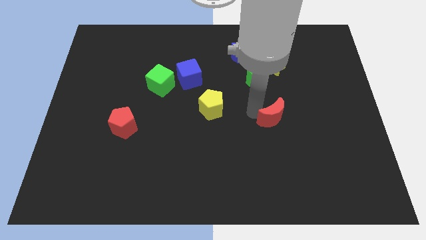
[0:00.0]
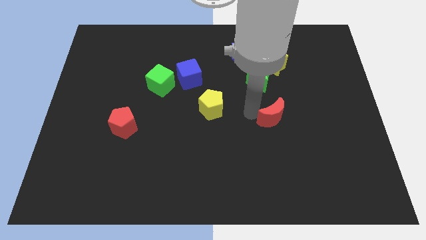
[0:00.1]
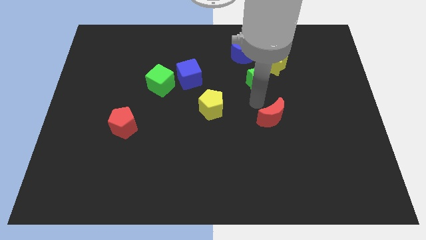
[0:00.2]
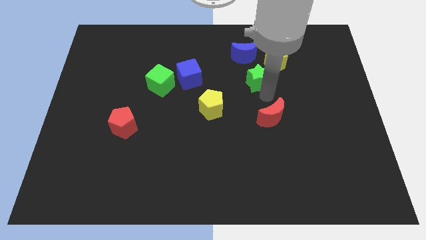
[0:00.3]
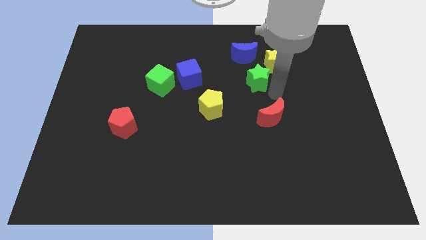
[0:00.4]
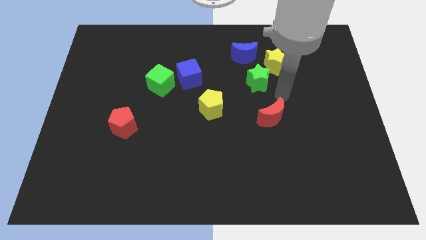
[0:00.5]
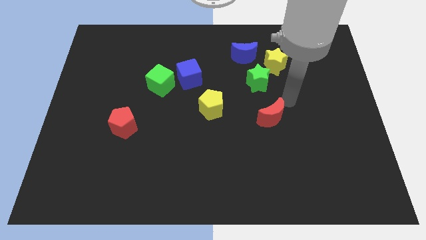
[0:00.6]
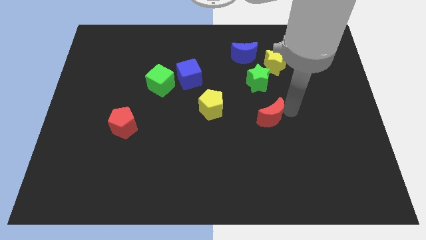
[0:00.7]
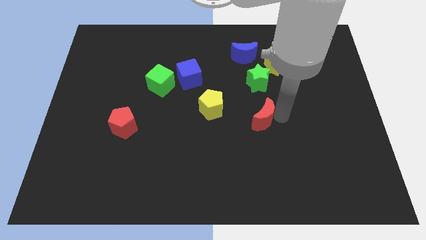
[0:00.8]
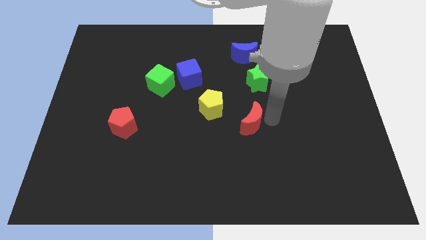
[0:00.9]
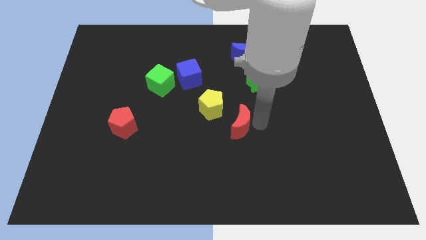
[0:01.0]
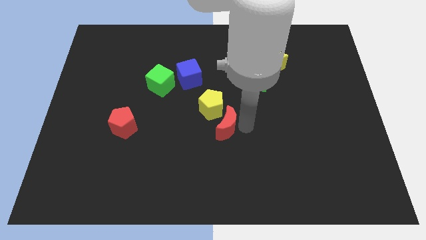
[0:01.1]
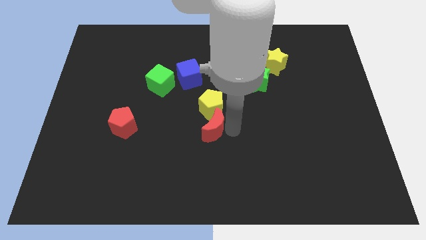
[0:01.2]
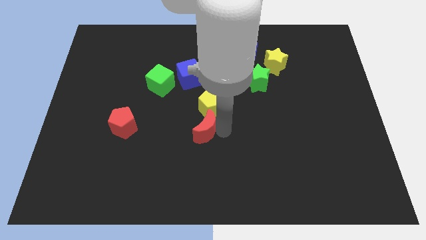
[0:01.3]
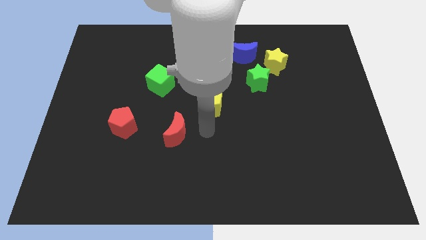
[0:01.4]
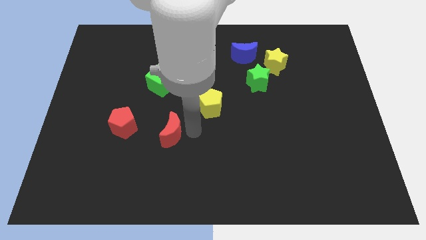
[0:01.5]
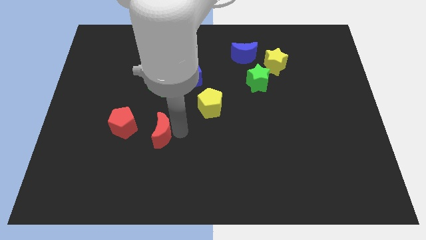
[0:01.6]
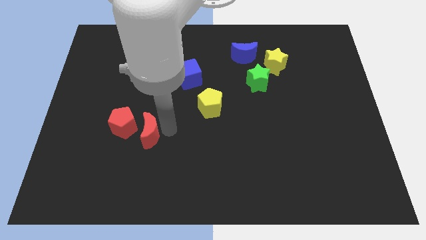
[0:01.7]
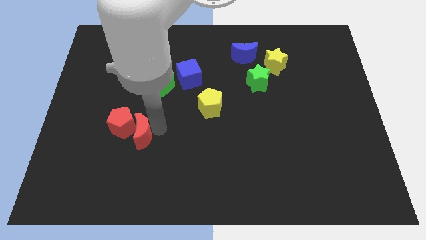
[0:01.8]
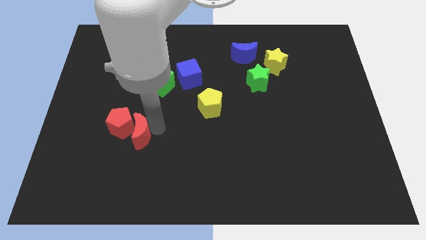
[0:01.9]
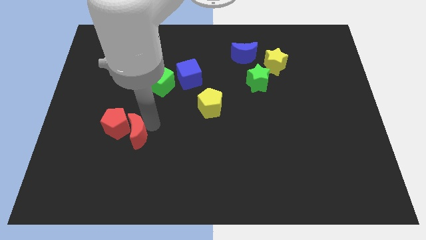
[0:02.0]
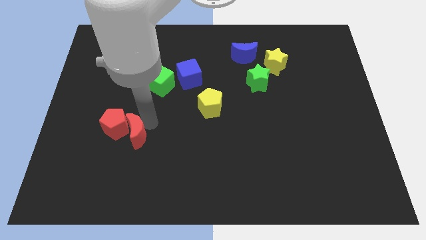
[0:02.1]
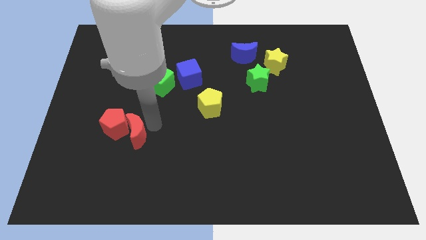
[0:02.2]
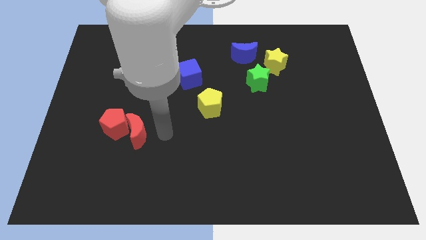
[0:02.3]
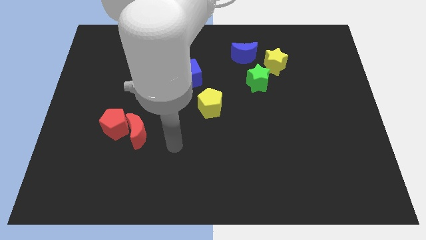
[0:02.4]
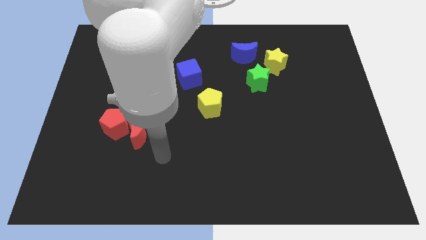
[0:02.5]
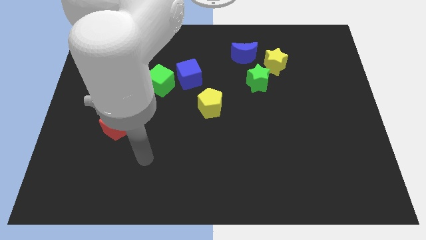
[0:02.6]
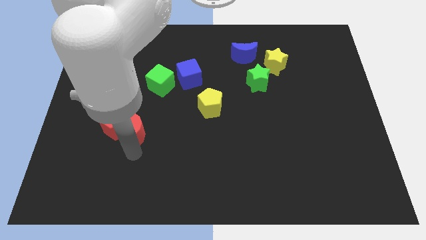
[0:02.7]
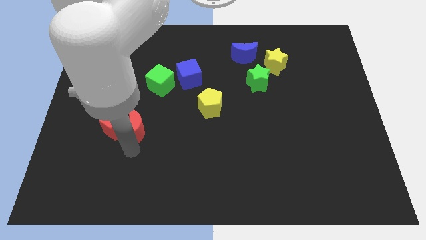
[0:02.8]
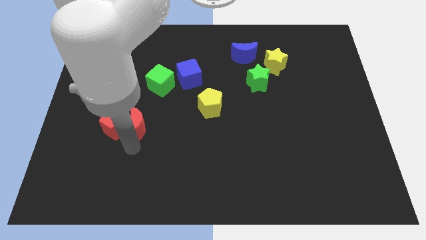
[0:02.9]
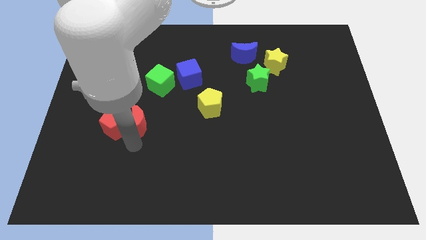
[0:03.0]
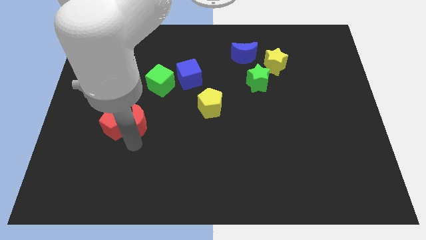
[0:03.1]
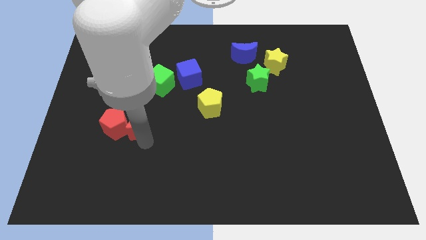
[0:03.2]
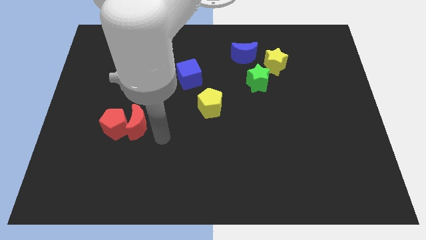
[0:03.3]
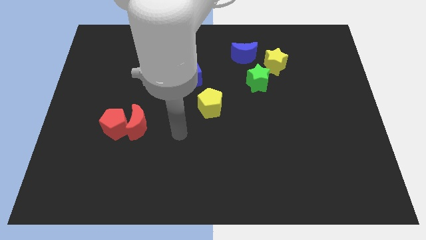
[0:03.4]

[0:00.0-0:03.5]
move the red crescent into the red pentagon

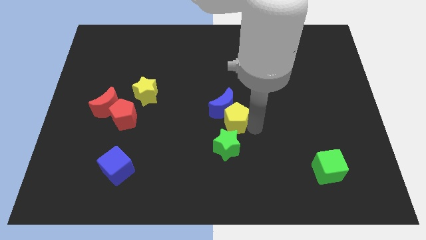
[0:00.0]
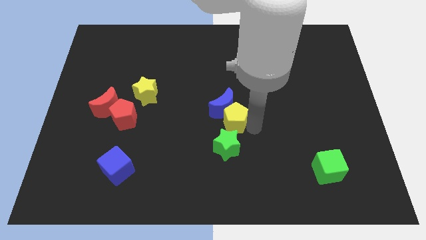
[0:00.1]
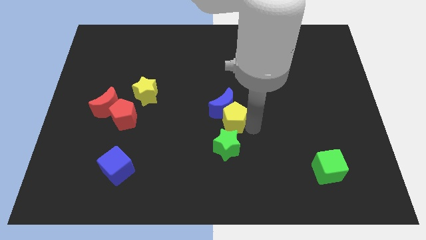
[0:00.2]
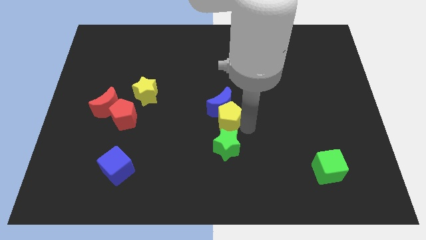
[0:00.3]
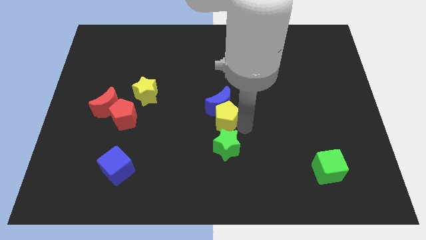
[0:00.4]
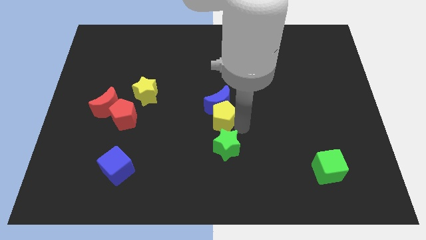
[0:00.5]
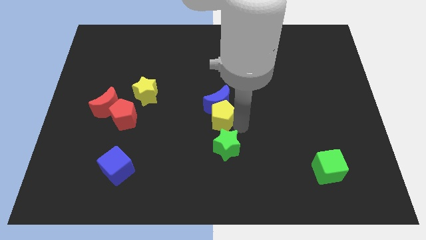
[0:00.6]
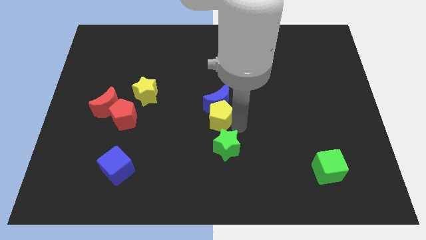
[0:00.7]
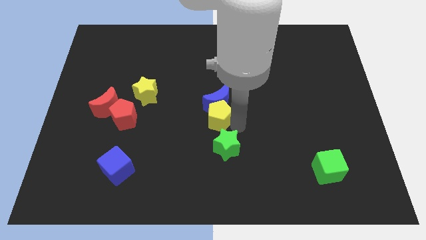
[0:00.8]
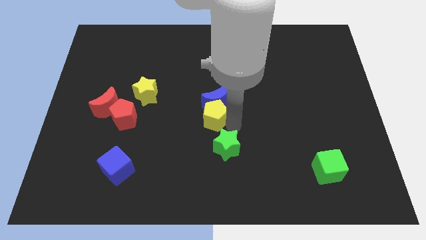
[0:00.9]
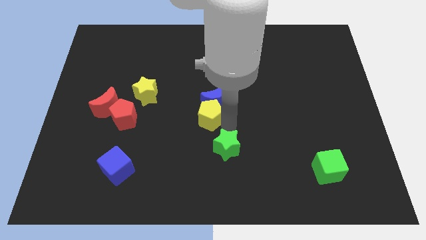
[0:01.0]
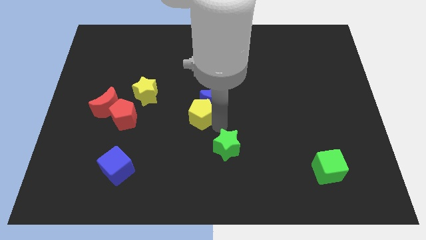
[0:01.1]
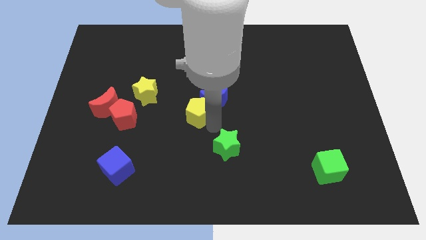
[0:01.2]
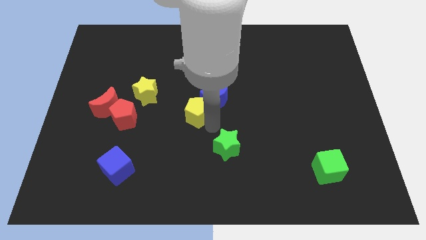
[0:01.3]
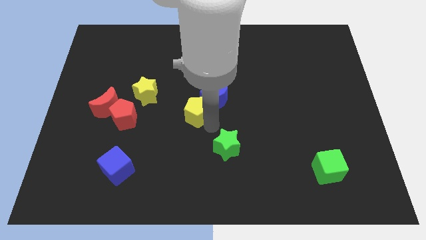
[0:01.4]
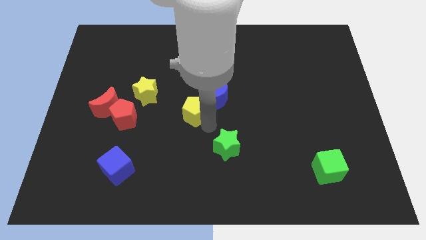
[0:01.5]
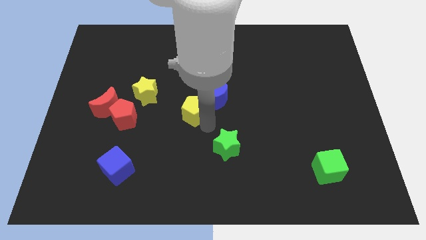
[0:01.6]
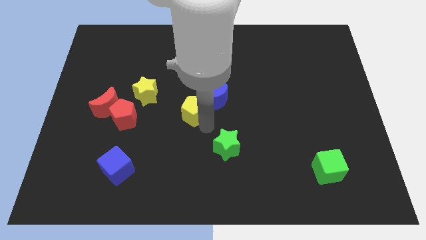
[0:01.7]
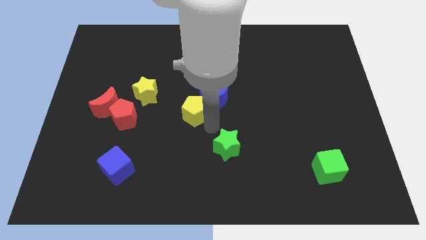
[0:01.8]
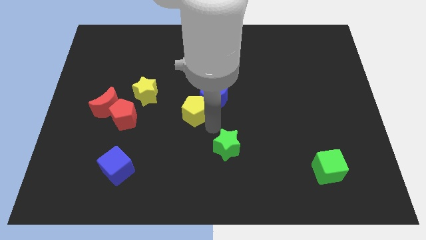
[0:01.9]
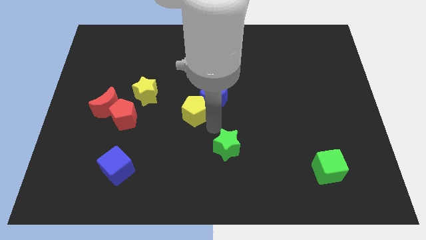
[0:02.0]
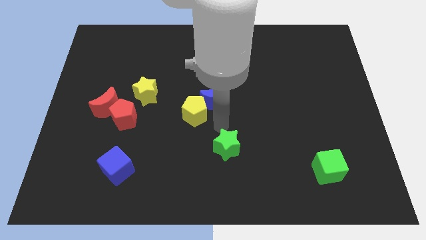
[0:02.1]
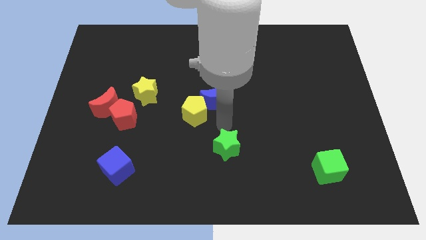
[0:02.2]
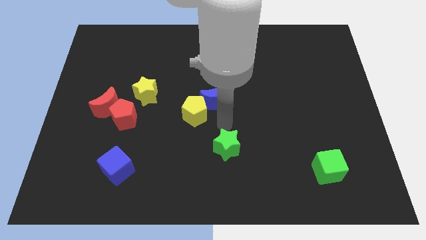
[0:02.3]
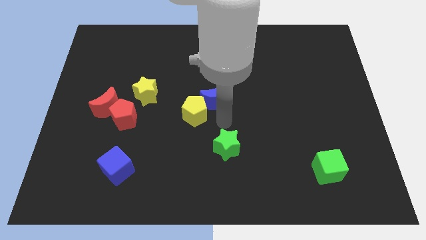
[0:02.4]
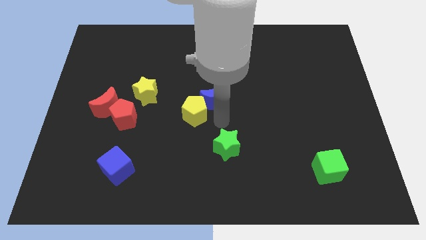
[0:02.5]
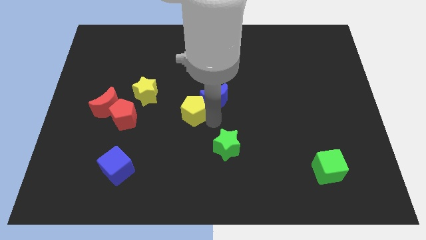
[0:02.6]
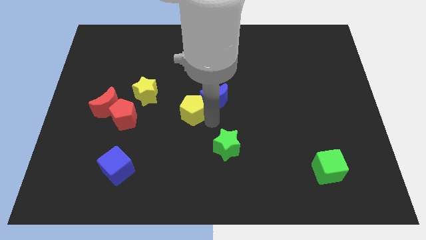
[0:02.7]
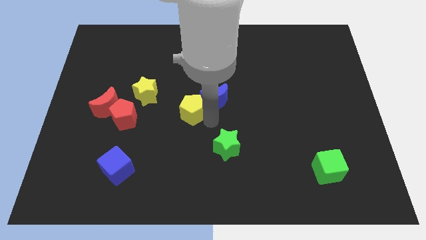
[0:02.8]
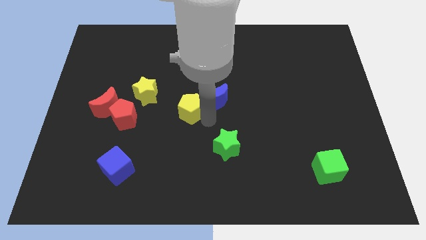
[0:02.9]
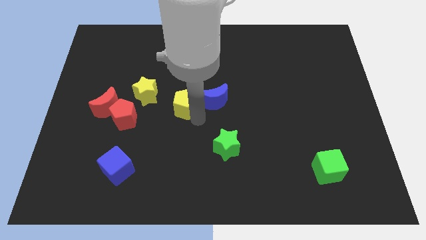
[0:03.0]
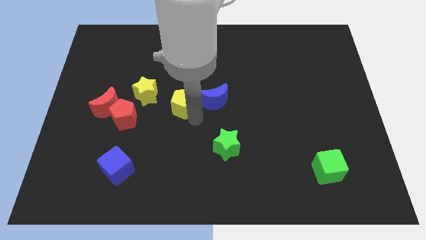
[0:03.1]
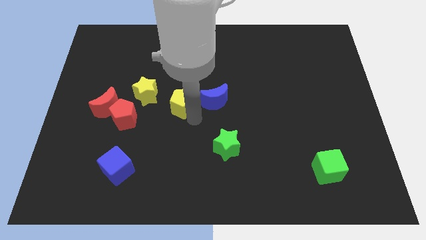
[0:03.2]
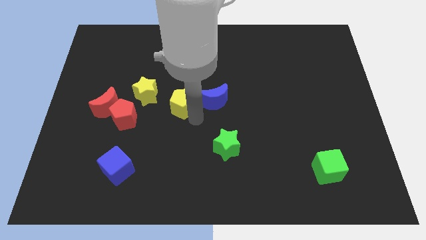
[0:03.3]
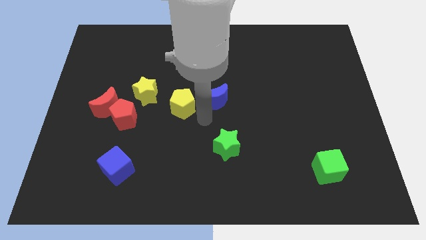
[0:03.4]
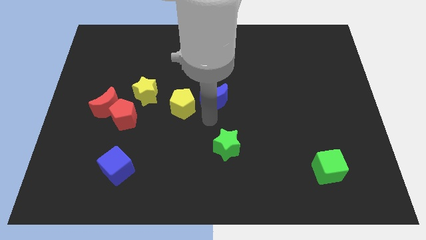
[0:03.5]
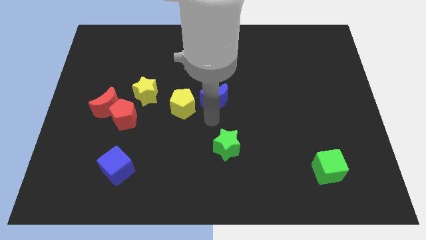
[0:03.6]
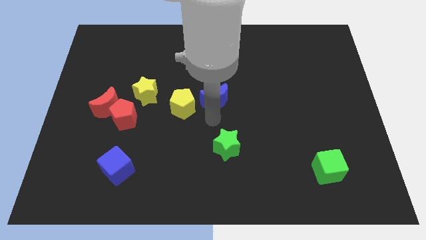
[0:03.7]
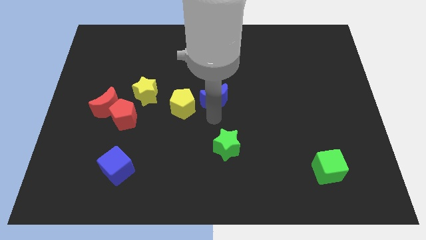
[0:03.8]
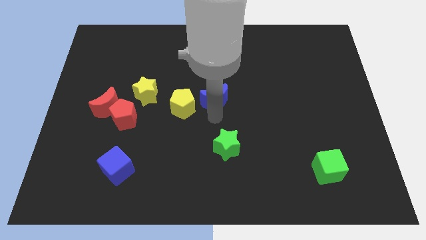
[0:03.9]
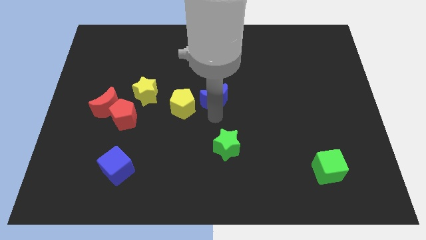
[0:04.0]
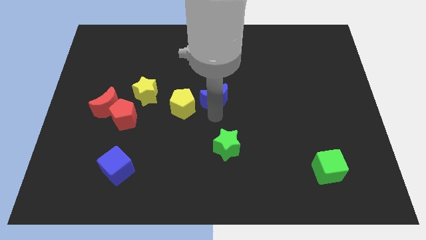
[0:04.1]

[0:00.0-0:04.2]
push the yellow pentagon to the left of the blue crescent

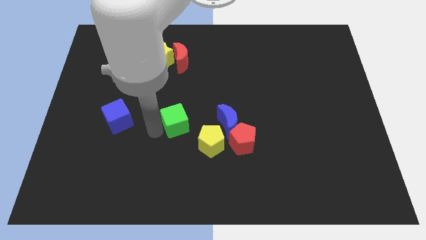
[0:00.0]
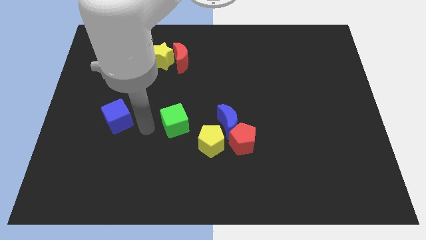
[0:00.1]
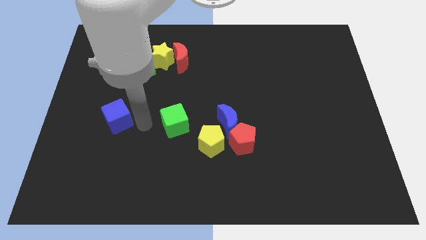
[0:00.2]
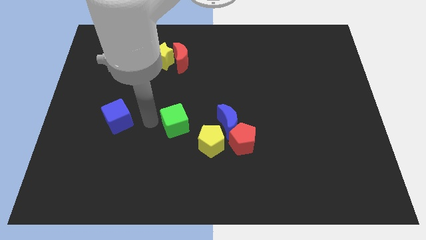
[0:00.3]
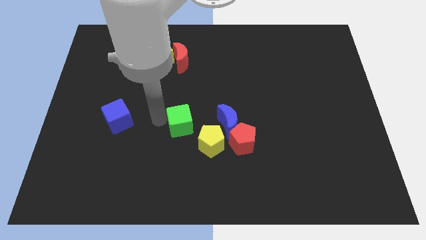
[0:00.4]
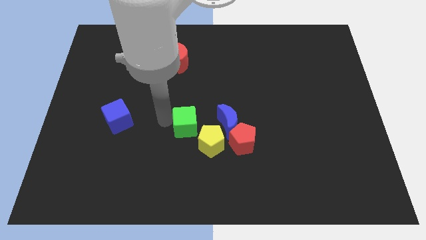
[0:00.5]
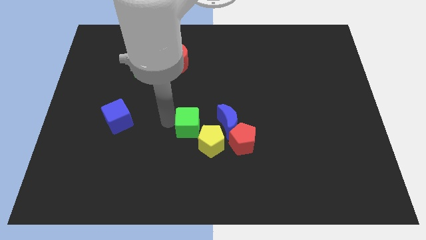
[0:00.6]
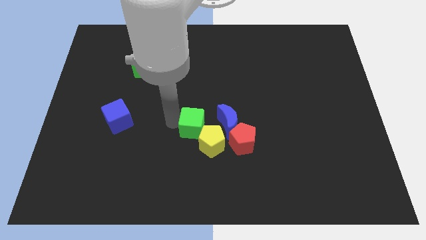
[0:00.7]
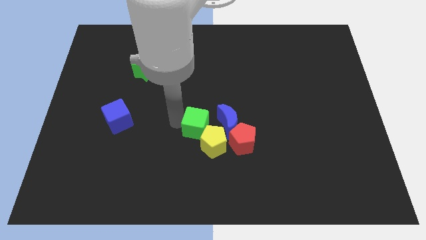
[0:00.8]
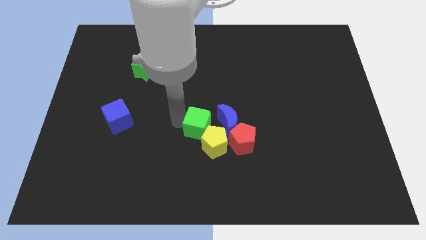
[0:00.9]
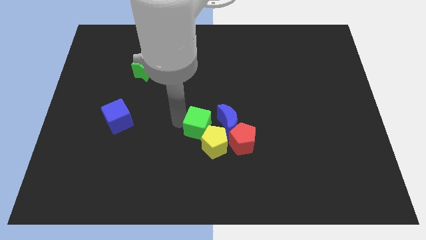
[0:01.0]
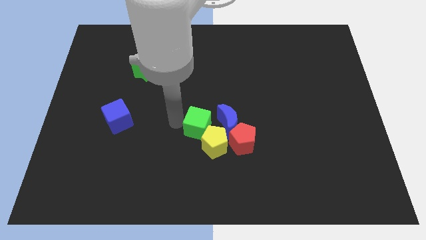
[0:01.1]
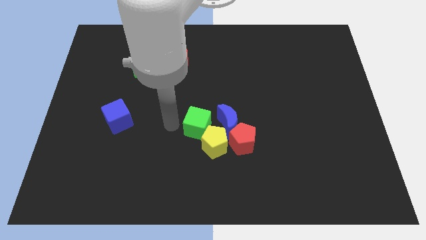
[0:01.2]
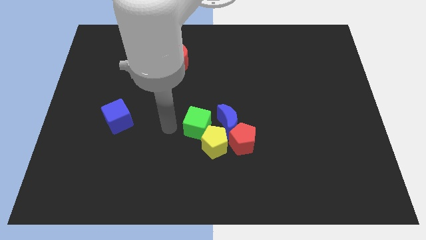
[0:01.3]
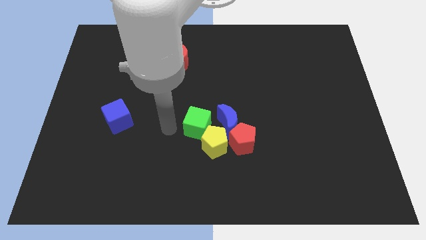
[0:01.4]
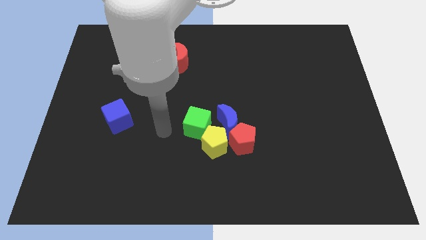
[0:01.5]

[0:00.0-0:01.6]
push the green cube into the yellow pentagon
